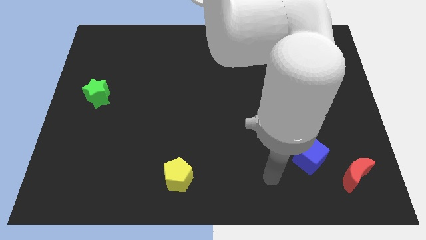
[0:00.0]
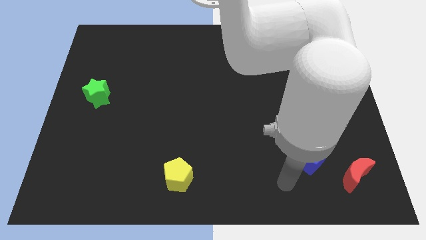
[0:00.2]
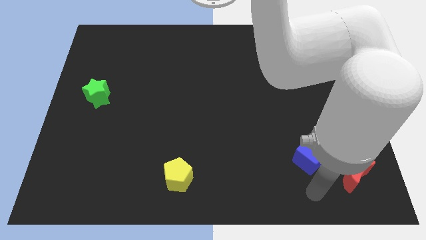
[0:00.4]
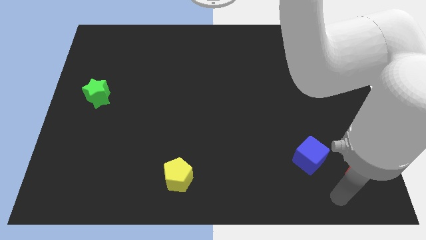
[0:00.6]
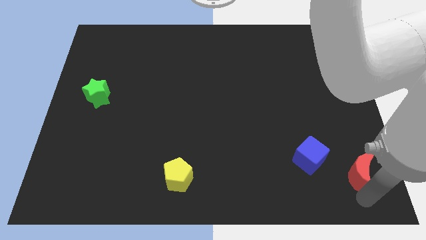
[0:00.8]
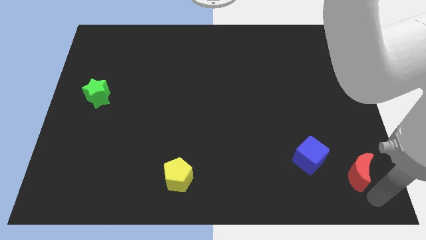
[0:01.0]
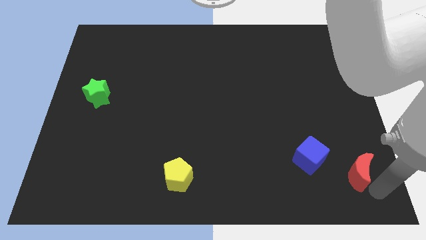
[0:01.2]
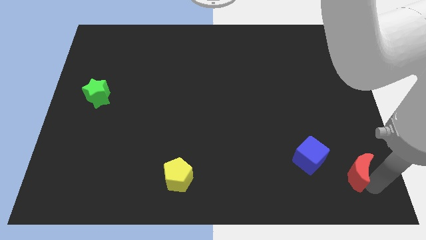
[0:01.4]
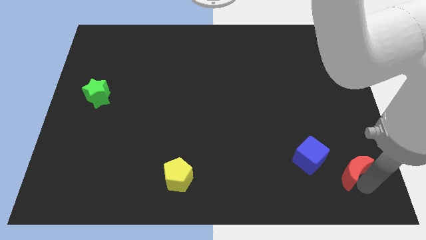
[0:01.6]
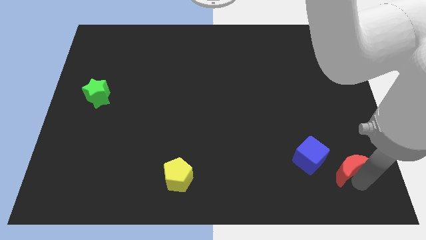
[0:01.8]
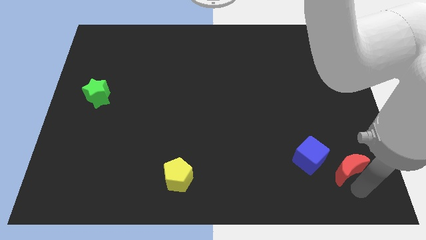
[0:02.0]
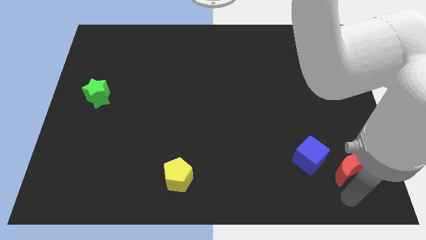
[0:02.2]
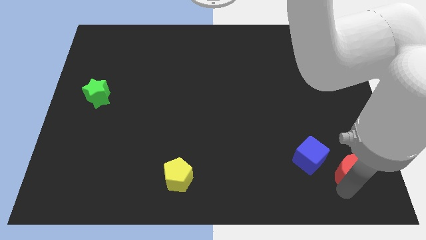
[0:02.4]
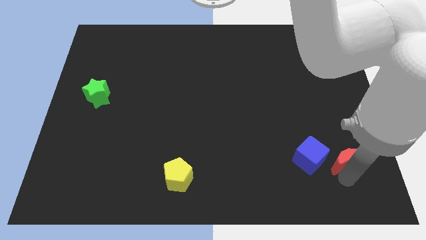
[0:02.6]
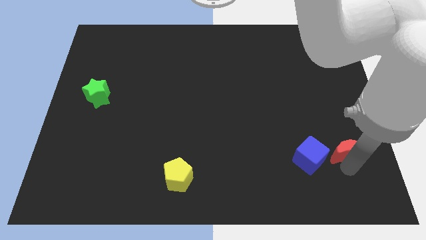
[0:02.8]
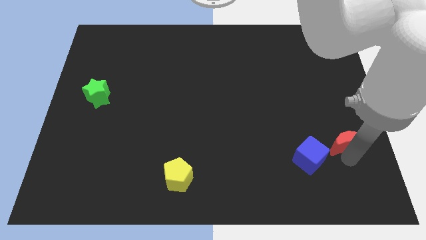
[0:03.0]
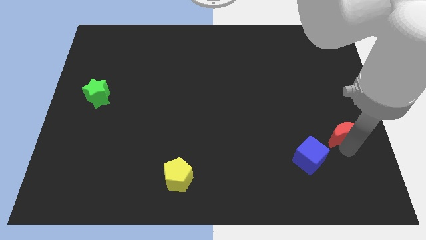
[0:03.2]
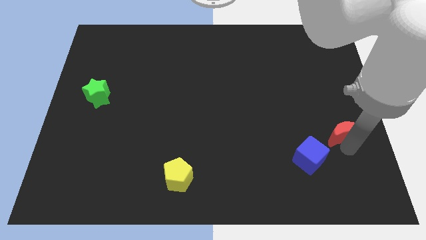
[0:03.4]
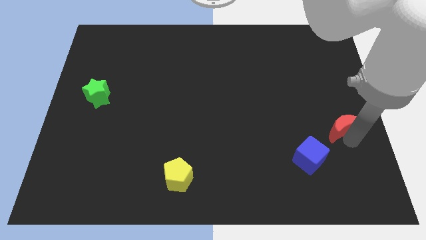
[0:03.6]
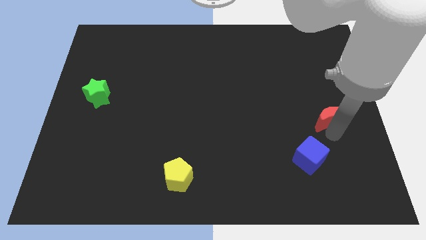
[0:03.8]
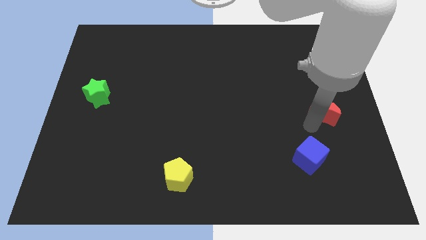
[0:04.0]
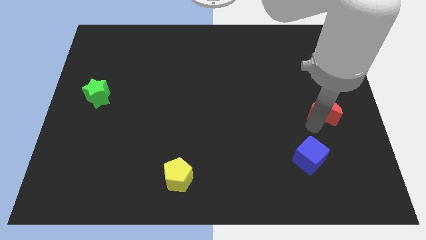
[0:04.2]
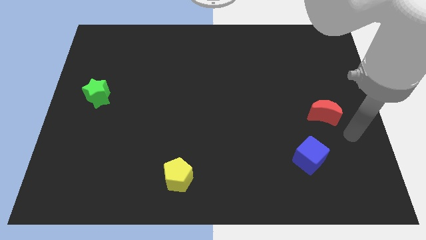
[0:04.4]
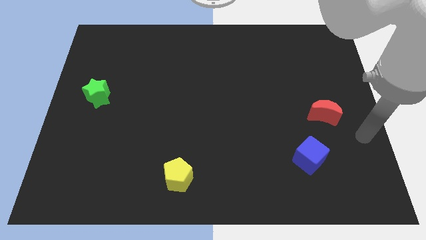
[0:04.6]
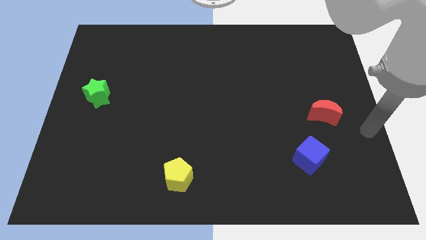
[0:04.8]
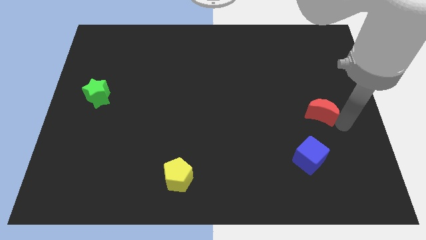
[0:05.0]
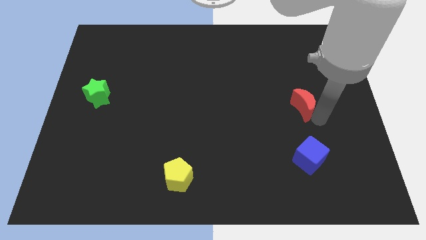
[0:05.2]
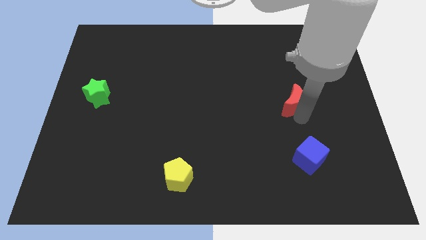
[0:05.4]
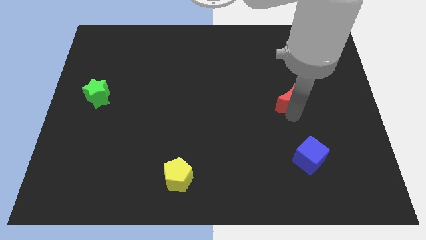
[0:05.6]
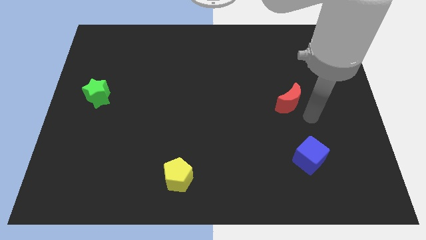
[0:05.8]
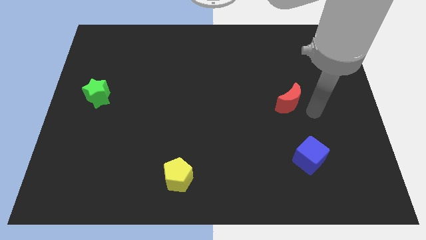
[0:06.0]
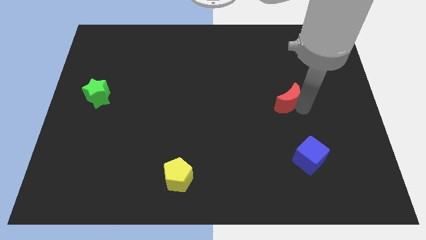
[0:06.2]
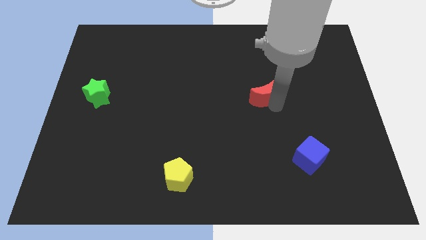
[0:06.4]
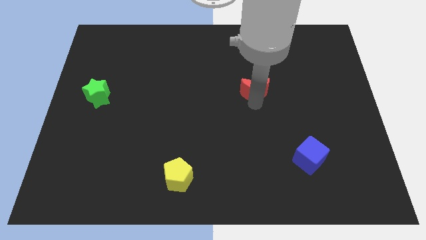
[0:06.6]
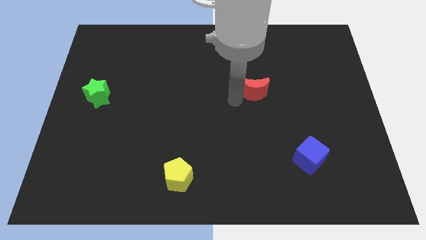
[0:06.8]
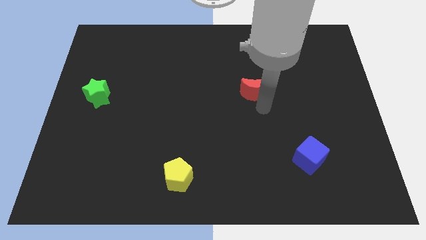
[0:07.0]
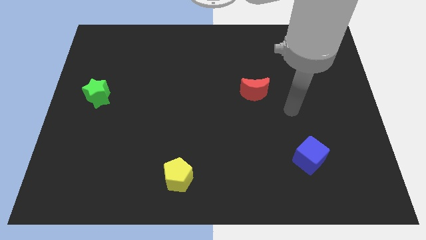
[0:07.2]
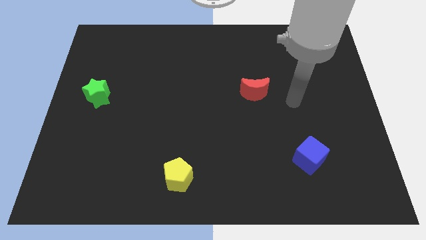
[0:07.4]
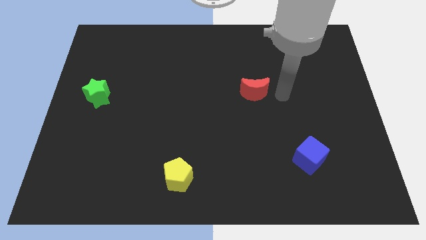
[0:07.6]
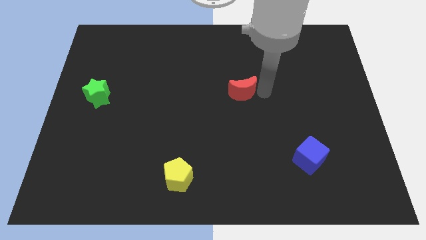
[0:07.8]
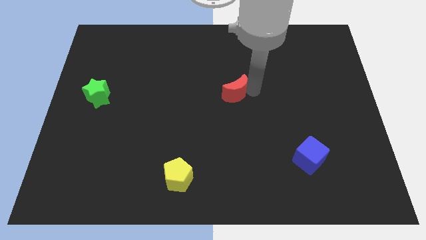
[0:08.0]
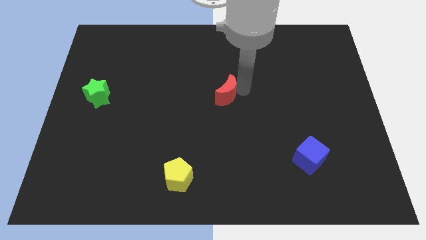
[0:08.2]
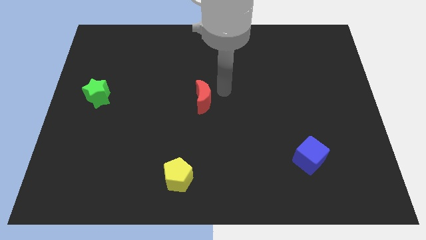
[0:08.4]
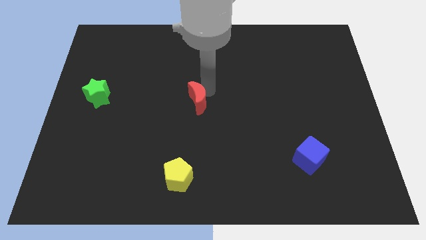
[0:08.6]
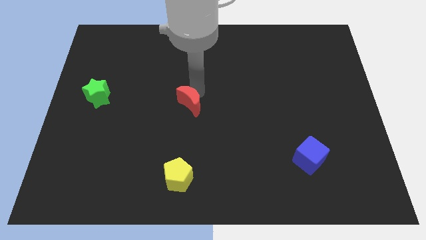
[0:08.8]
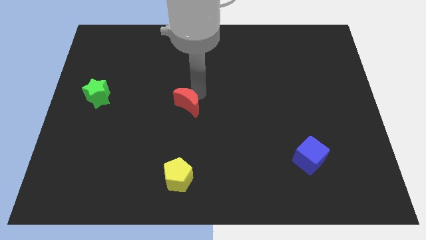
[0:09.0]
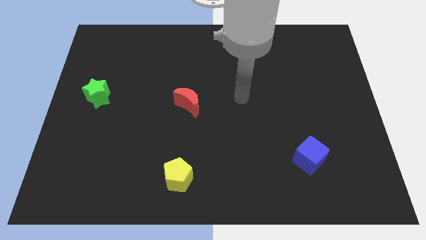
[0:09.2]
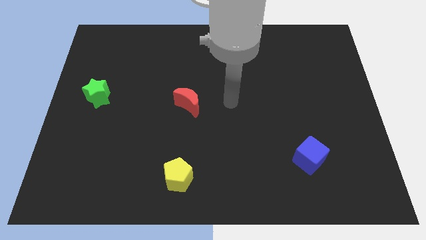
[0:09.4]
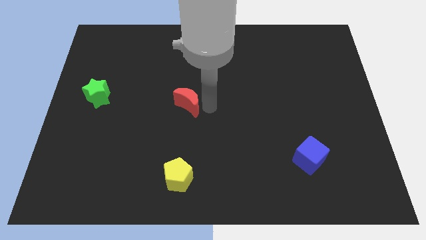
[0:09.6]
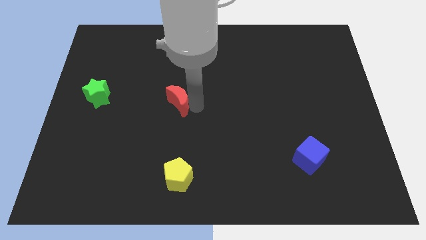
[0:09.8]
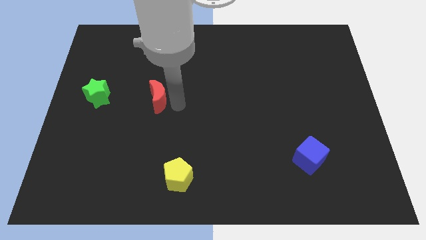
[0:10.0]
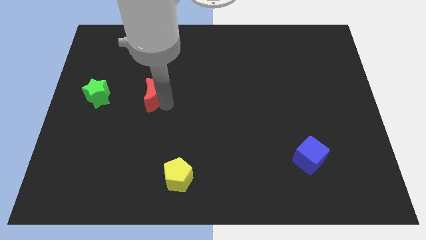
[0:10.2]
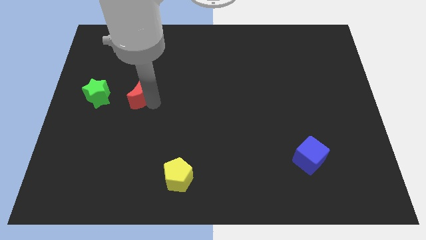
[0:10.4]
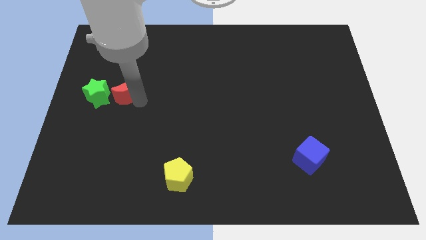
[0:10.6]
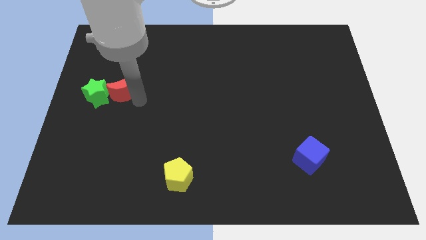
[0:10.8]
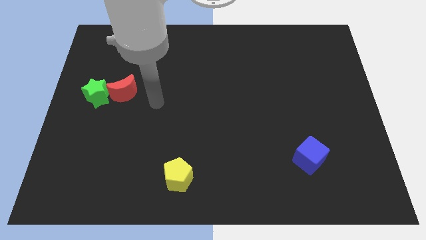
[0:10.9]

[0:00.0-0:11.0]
move the moon close to the green block

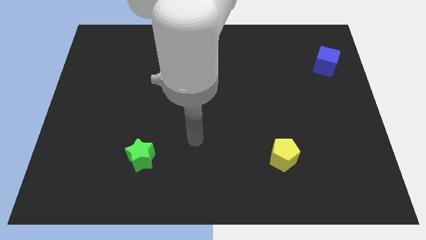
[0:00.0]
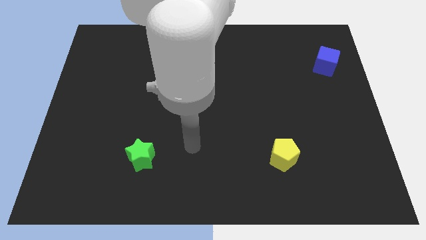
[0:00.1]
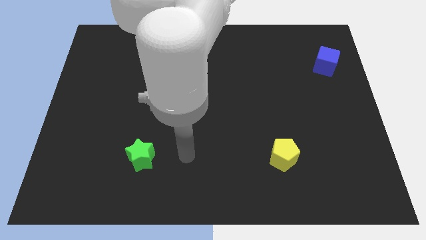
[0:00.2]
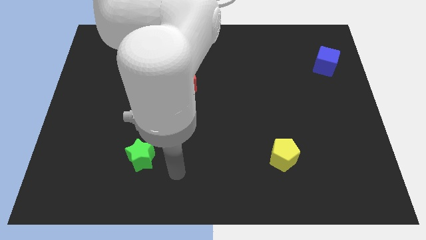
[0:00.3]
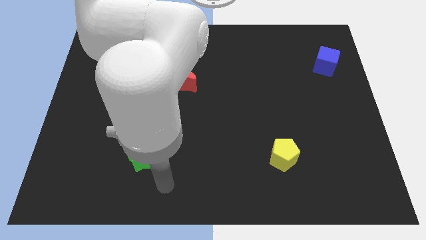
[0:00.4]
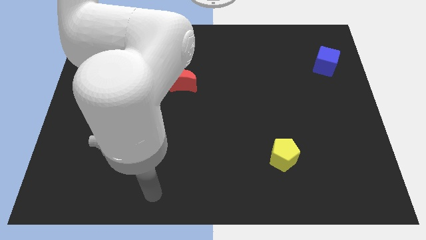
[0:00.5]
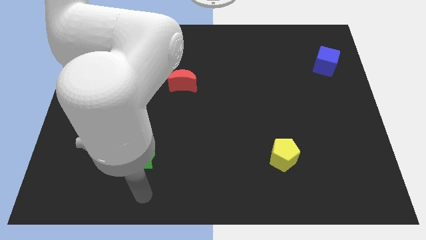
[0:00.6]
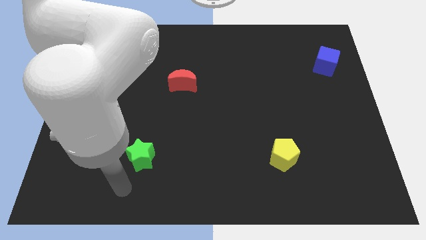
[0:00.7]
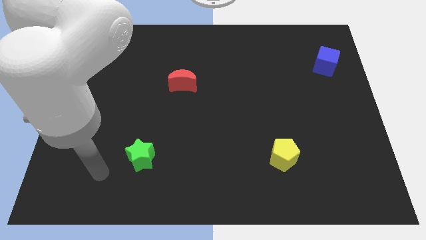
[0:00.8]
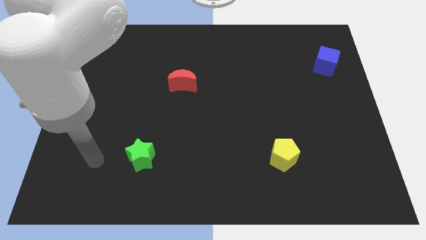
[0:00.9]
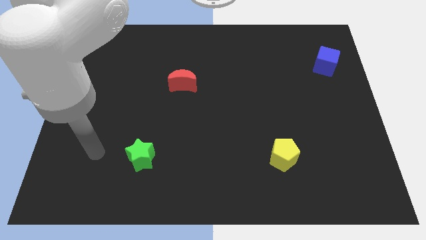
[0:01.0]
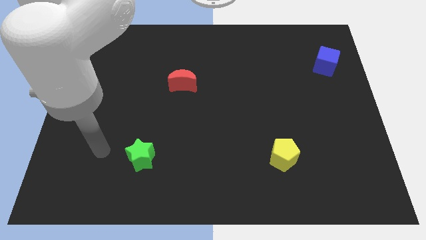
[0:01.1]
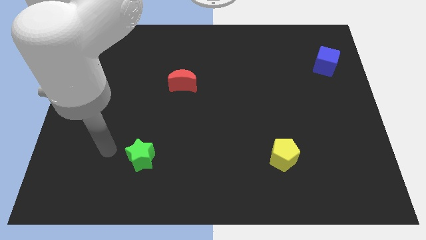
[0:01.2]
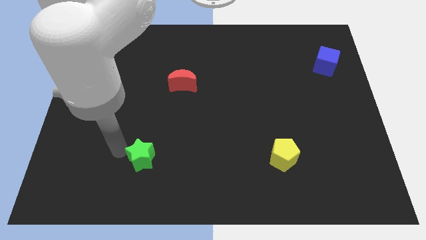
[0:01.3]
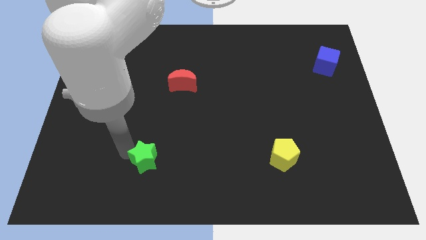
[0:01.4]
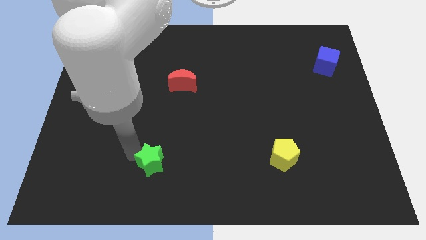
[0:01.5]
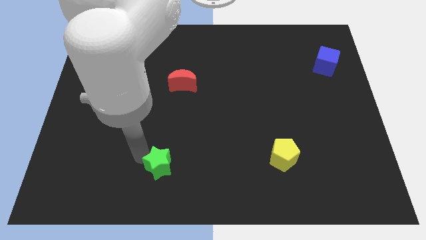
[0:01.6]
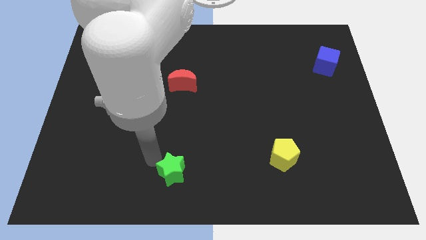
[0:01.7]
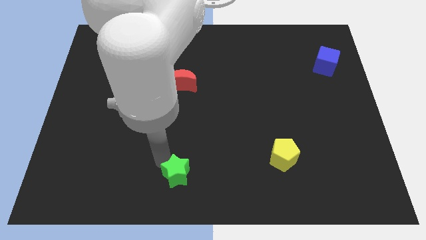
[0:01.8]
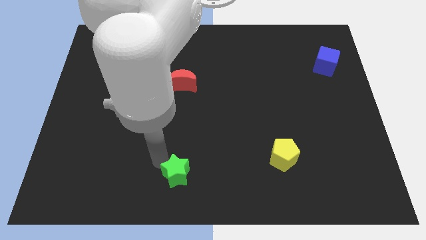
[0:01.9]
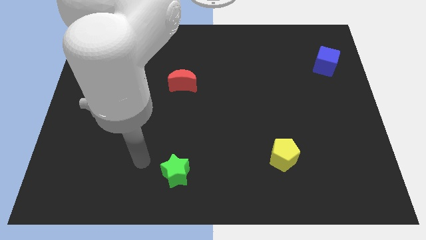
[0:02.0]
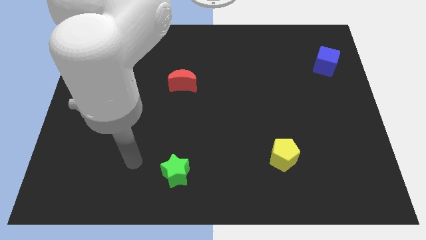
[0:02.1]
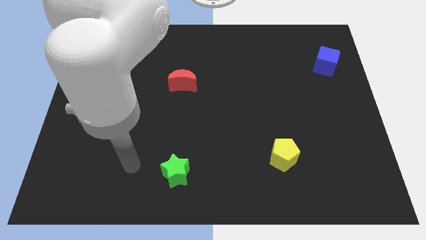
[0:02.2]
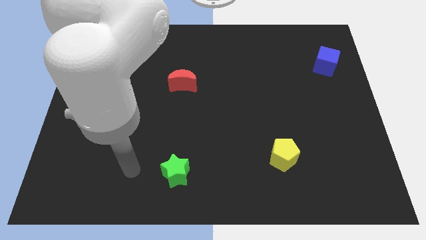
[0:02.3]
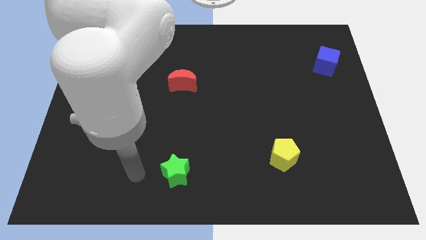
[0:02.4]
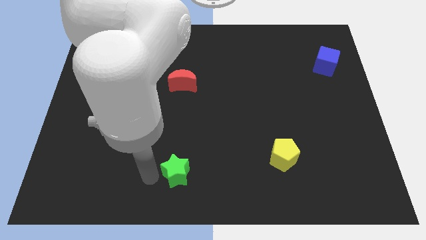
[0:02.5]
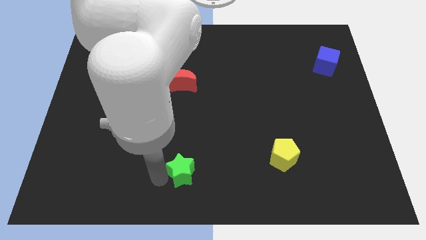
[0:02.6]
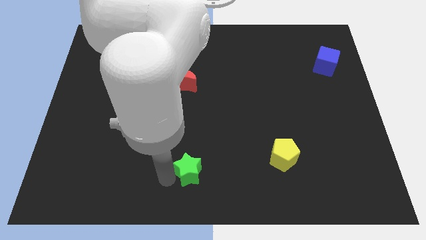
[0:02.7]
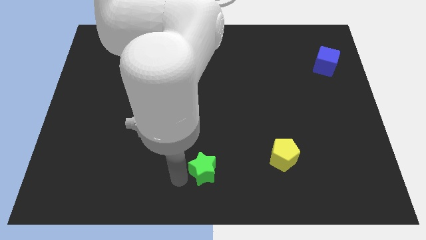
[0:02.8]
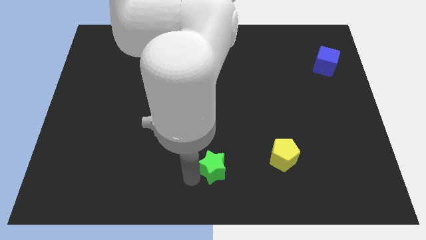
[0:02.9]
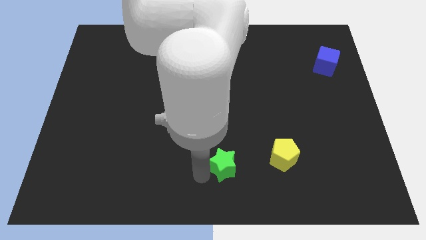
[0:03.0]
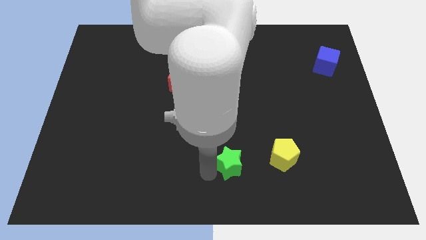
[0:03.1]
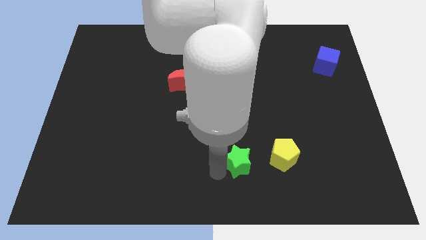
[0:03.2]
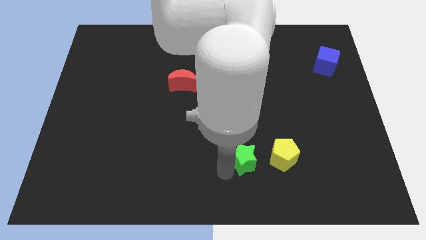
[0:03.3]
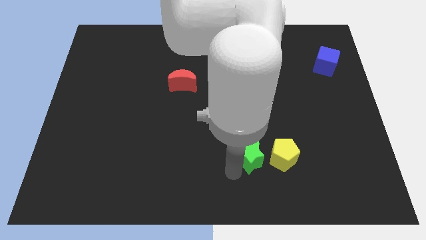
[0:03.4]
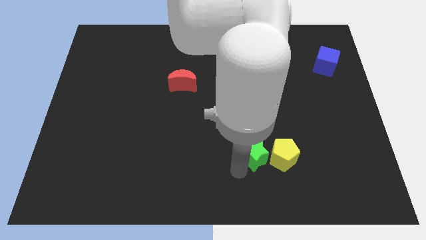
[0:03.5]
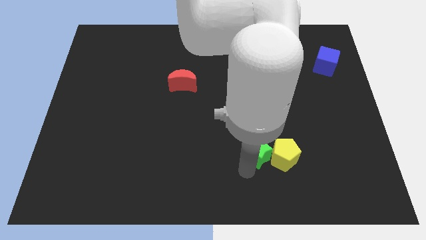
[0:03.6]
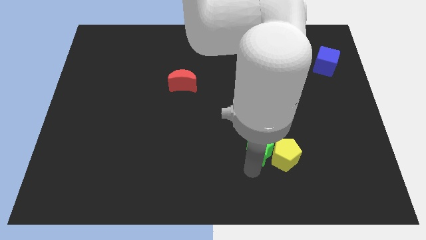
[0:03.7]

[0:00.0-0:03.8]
push the green star next to the yellow pentagon
